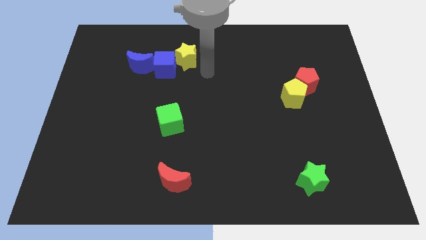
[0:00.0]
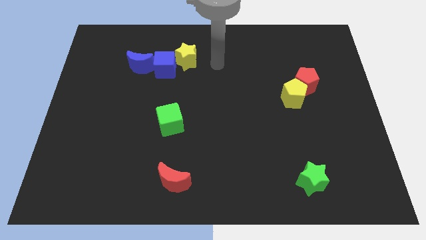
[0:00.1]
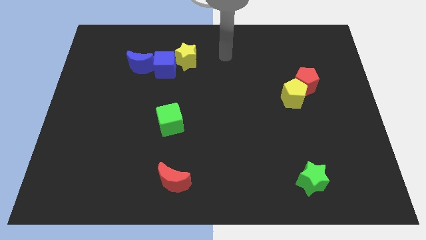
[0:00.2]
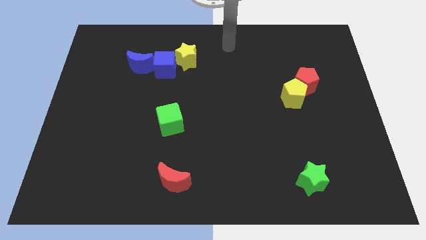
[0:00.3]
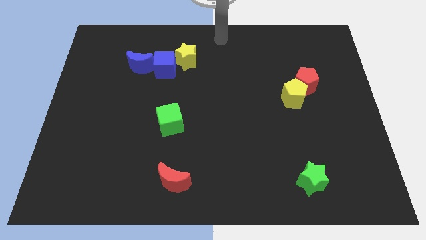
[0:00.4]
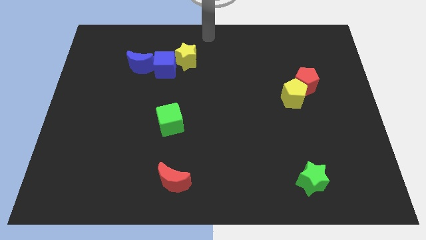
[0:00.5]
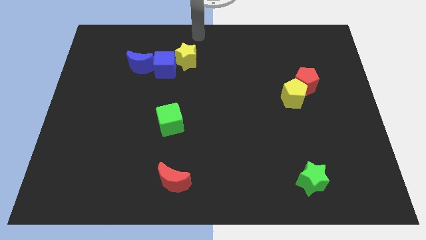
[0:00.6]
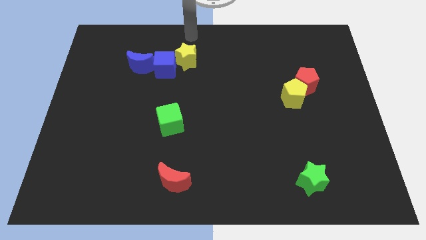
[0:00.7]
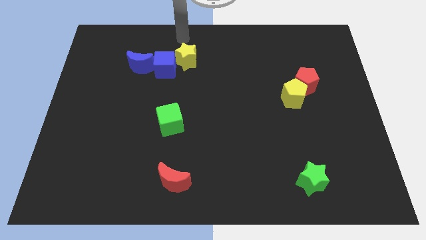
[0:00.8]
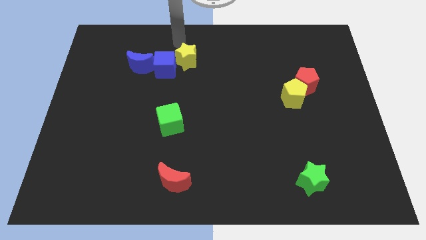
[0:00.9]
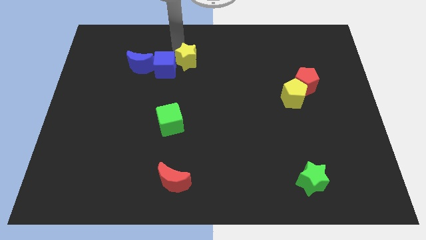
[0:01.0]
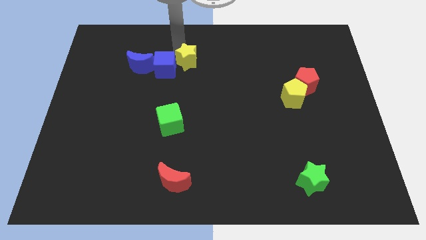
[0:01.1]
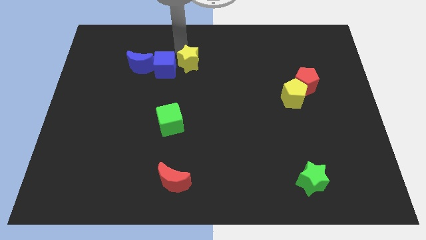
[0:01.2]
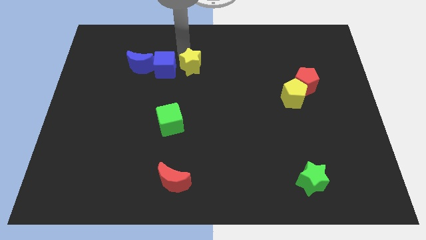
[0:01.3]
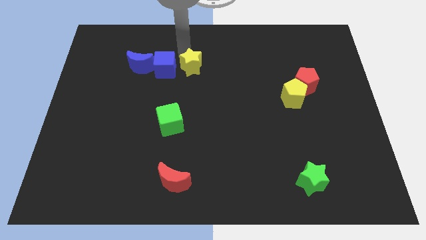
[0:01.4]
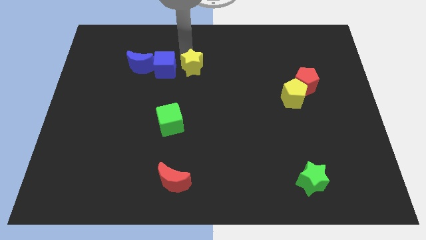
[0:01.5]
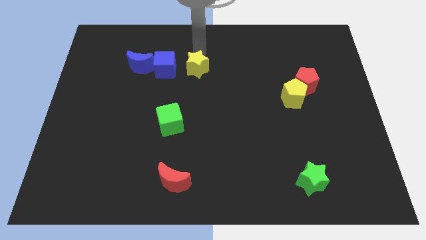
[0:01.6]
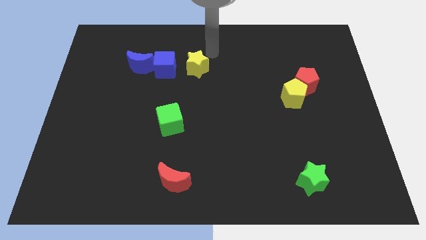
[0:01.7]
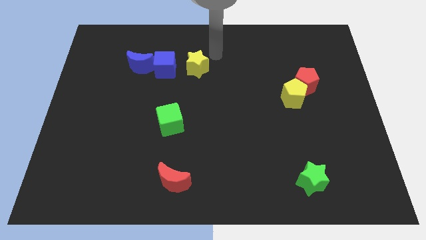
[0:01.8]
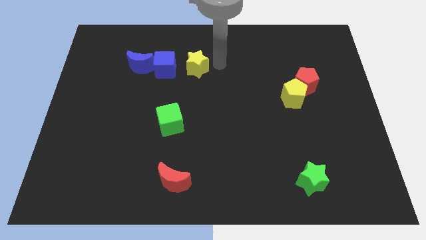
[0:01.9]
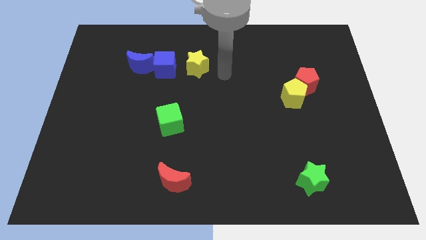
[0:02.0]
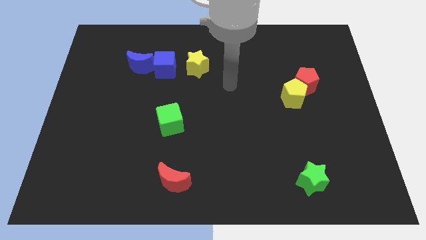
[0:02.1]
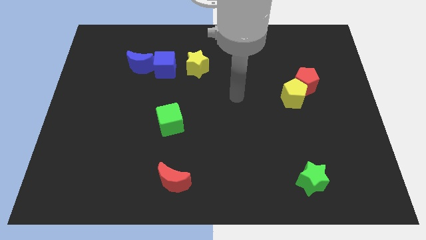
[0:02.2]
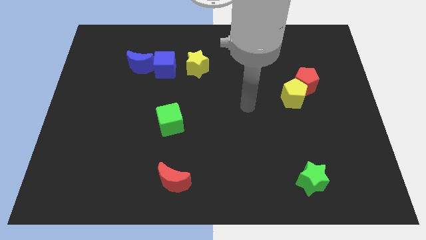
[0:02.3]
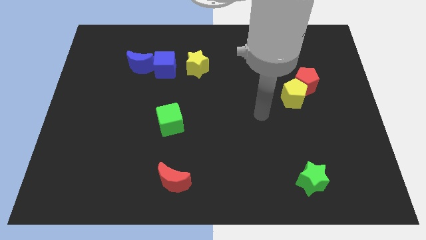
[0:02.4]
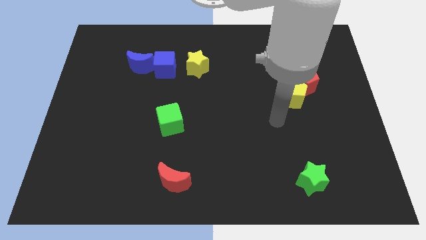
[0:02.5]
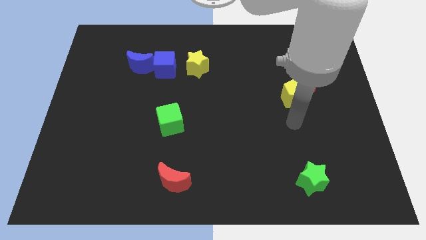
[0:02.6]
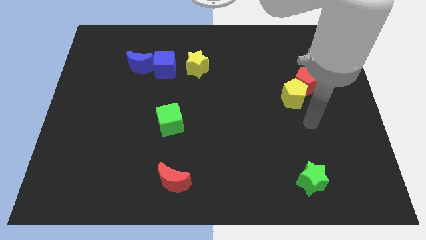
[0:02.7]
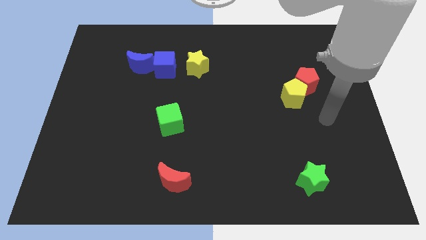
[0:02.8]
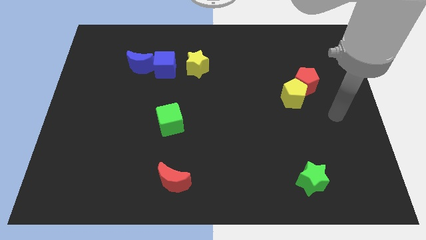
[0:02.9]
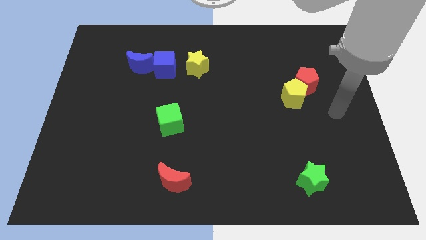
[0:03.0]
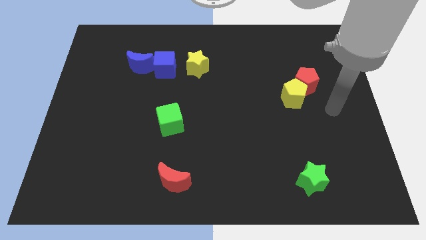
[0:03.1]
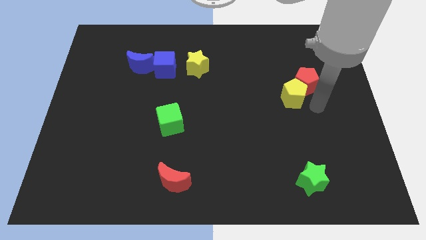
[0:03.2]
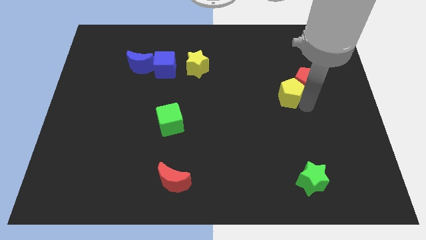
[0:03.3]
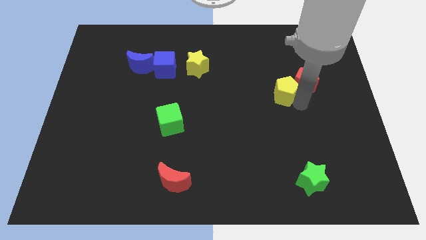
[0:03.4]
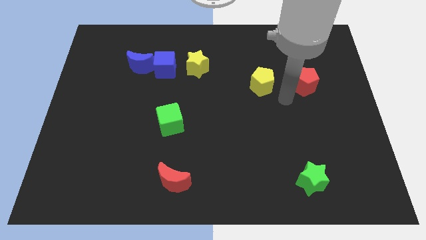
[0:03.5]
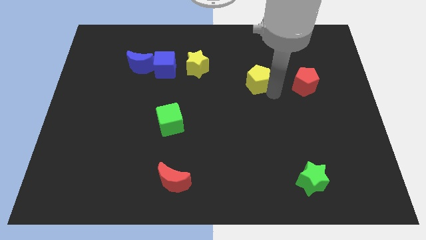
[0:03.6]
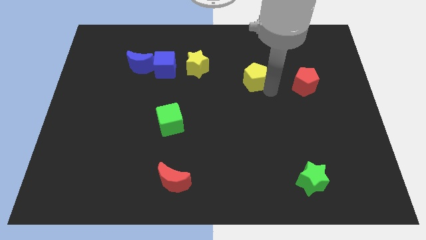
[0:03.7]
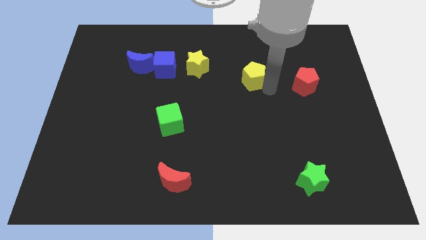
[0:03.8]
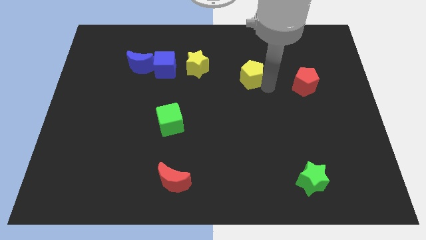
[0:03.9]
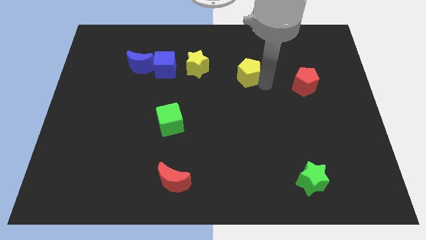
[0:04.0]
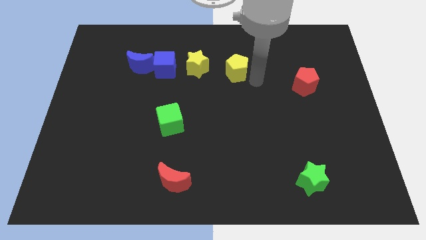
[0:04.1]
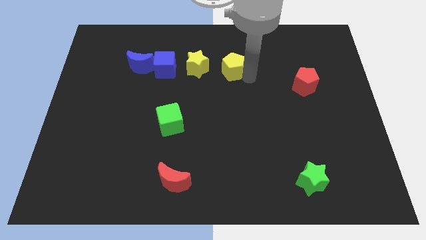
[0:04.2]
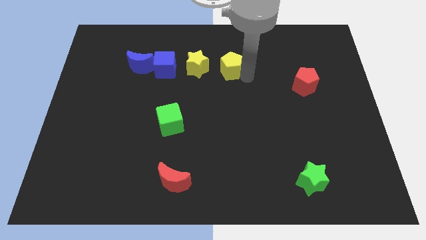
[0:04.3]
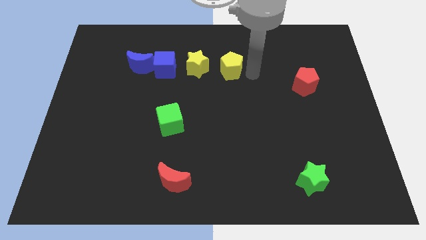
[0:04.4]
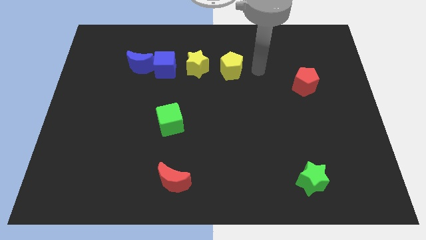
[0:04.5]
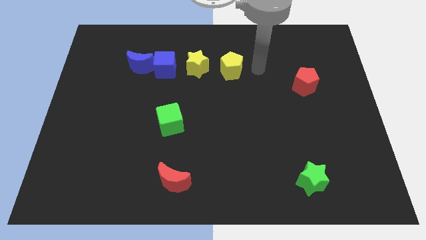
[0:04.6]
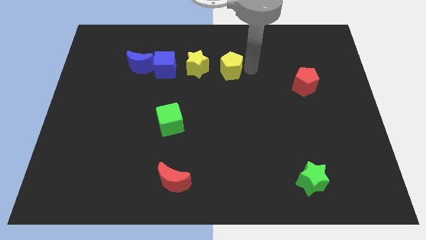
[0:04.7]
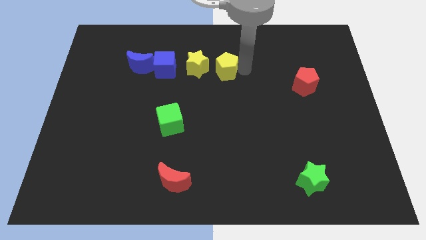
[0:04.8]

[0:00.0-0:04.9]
push the yellow pentagon towards the yellow star

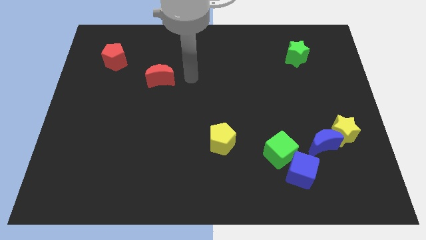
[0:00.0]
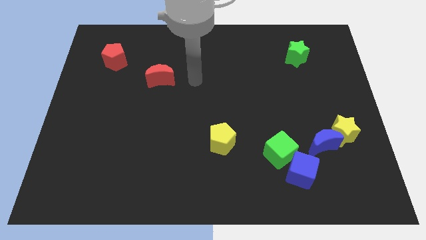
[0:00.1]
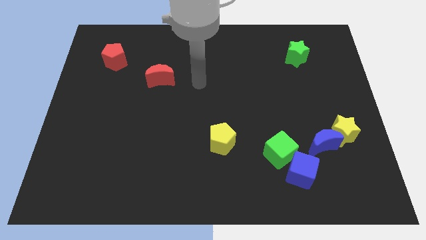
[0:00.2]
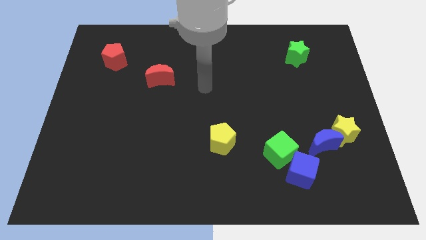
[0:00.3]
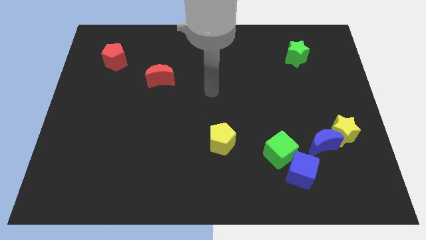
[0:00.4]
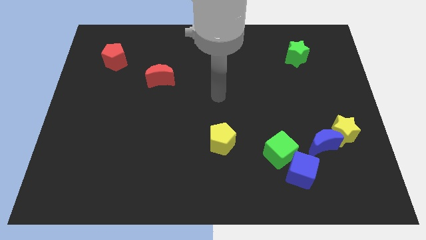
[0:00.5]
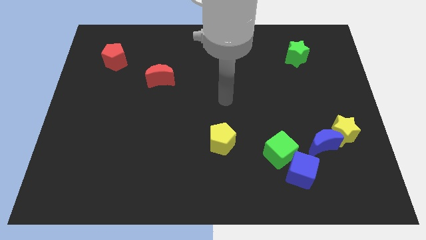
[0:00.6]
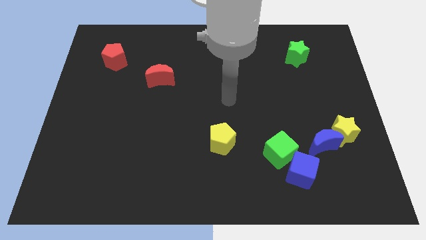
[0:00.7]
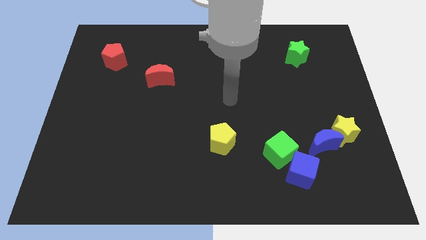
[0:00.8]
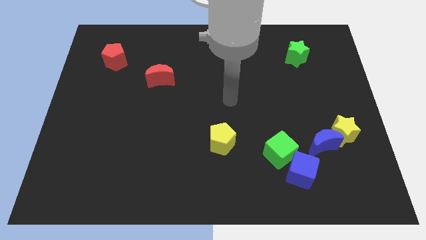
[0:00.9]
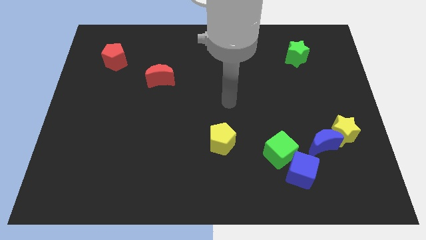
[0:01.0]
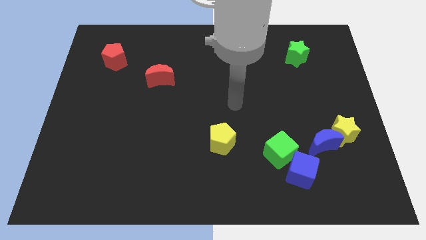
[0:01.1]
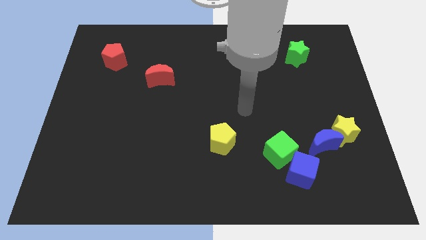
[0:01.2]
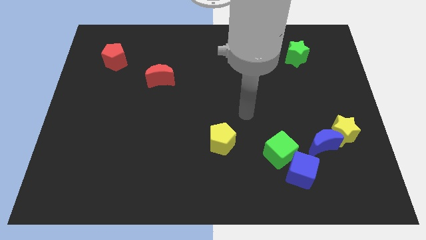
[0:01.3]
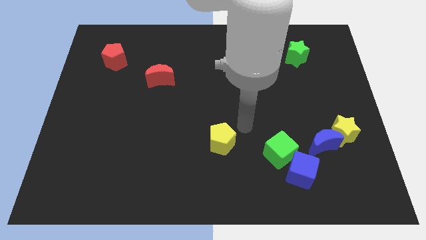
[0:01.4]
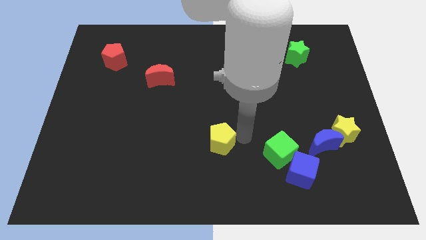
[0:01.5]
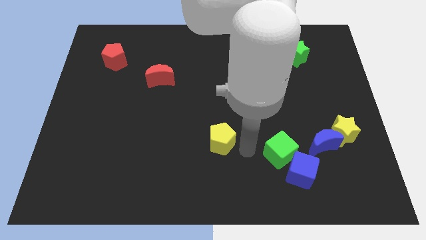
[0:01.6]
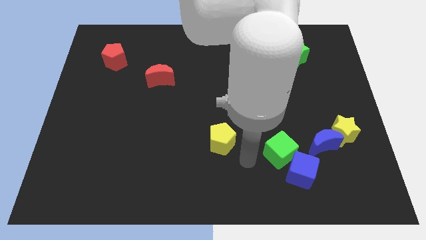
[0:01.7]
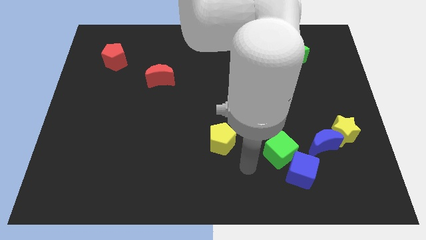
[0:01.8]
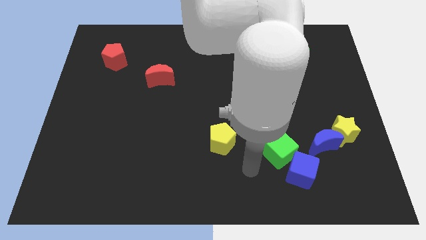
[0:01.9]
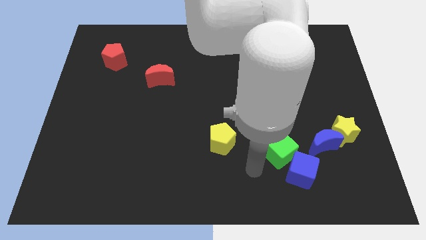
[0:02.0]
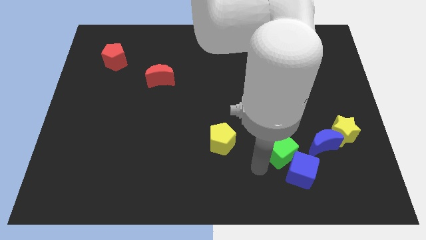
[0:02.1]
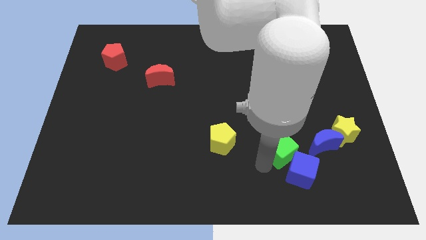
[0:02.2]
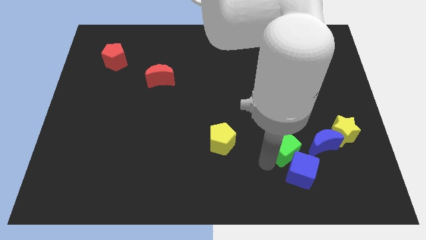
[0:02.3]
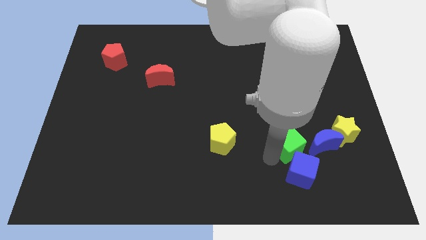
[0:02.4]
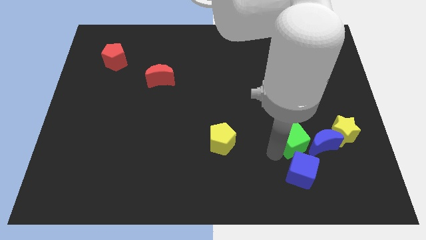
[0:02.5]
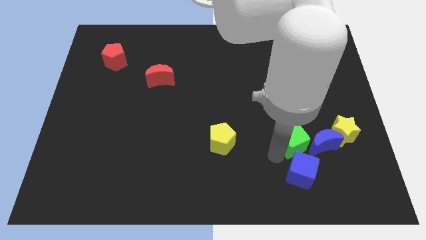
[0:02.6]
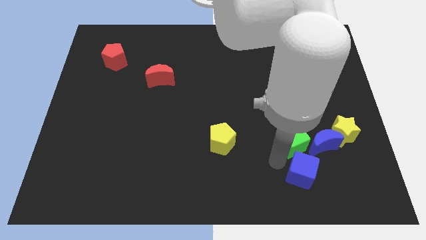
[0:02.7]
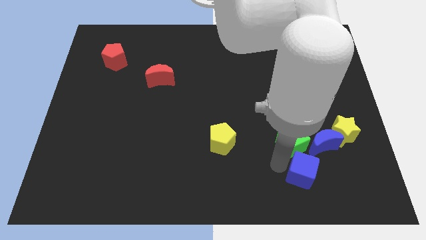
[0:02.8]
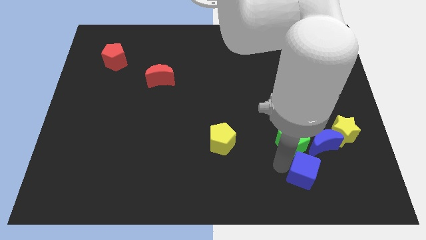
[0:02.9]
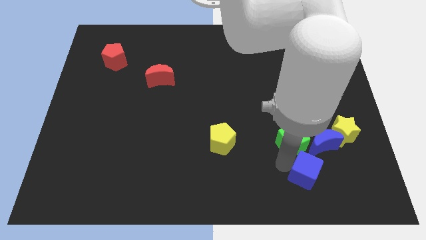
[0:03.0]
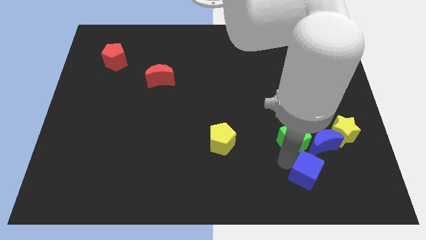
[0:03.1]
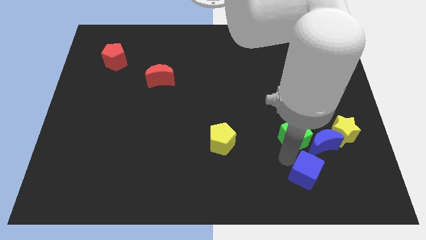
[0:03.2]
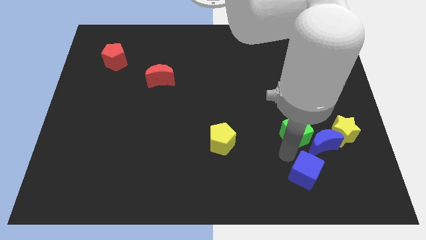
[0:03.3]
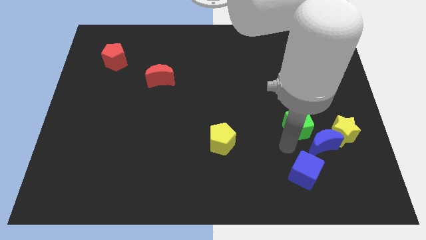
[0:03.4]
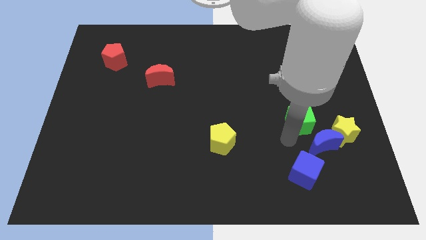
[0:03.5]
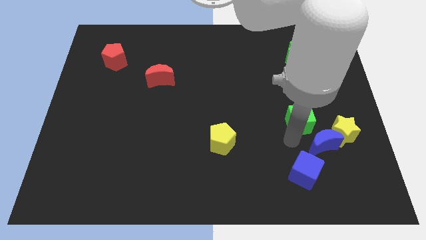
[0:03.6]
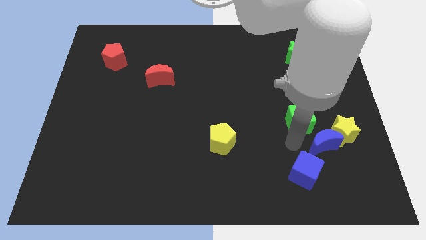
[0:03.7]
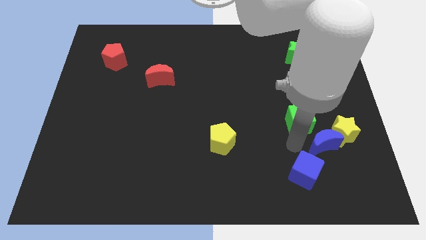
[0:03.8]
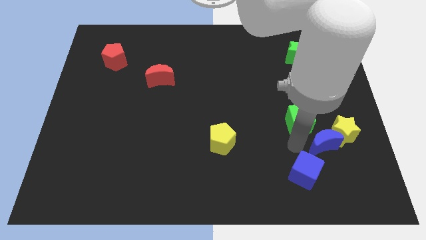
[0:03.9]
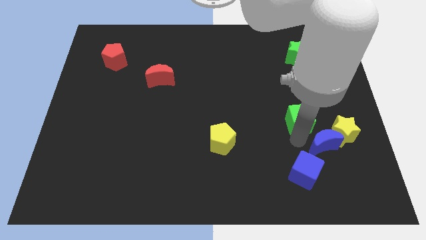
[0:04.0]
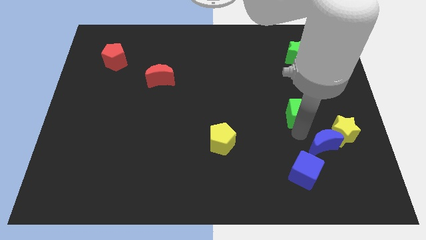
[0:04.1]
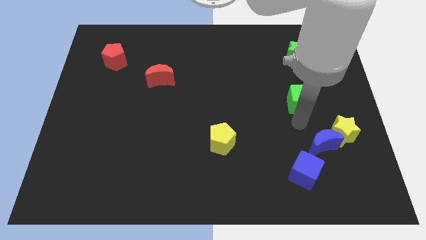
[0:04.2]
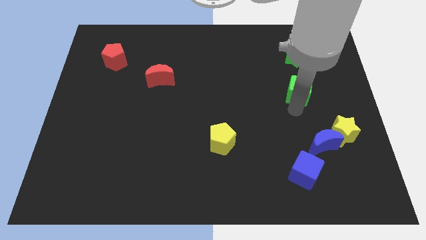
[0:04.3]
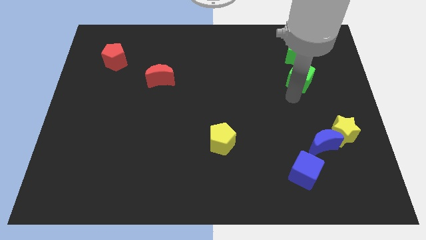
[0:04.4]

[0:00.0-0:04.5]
push the green cube towards the green star
